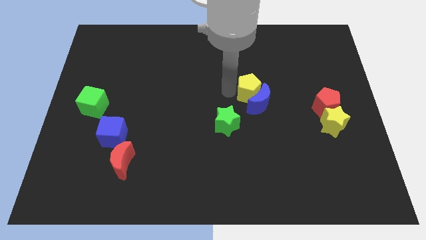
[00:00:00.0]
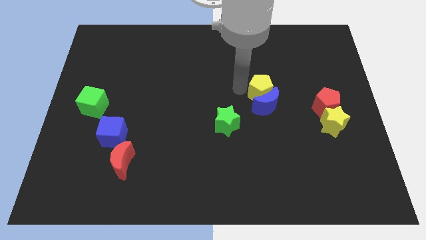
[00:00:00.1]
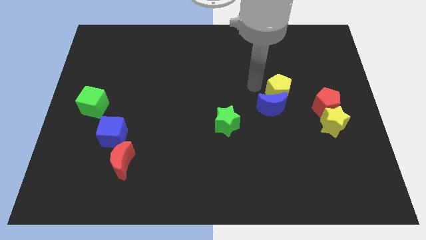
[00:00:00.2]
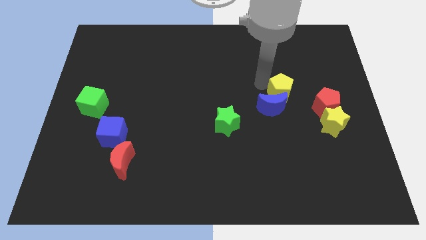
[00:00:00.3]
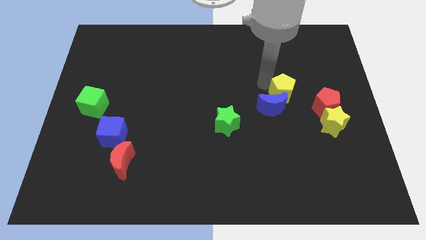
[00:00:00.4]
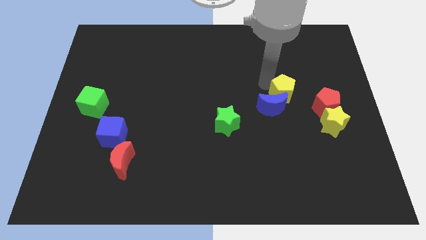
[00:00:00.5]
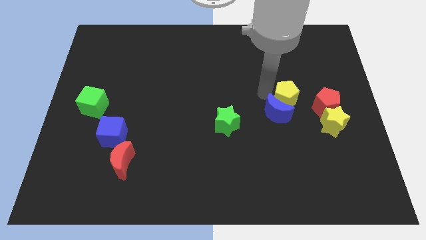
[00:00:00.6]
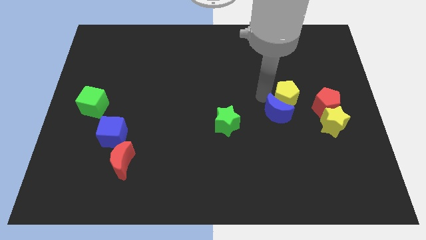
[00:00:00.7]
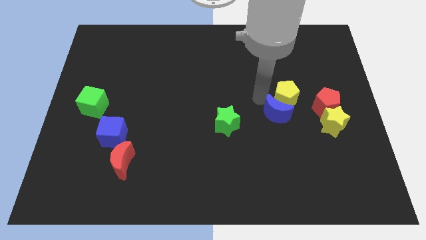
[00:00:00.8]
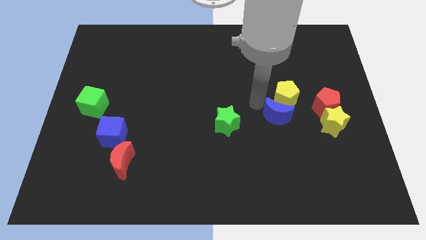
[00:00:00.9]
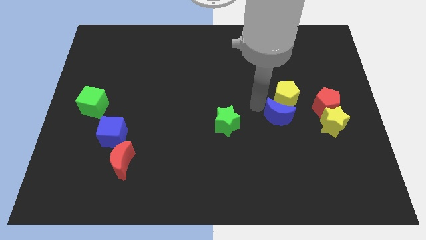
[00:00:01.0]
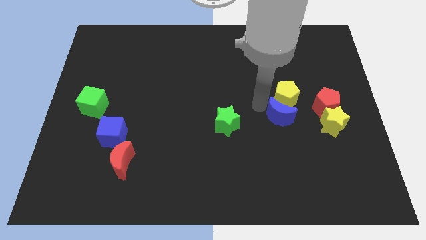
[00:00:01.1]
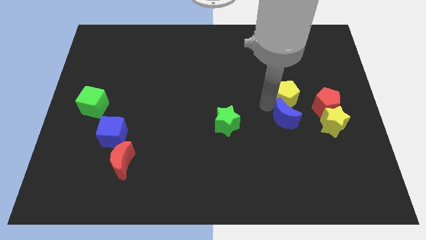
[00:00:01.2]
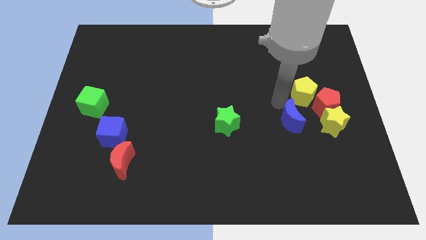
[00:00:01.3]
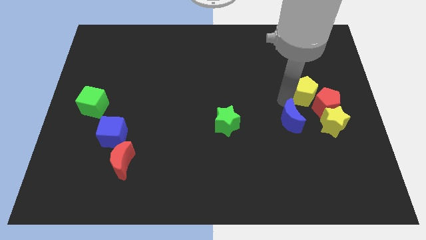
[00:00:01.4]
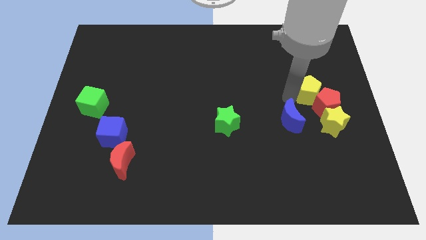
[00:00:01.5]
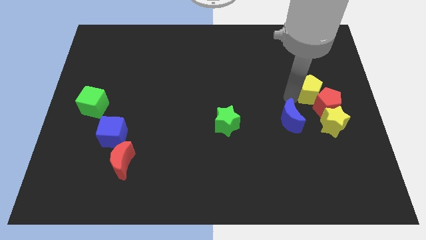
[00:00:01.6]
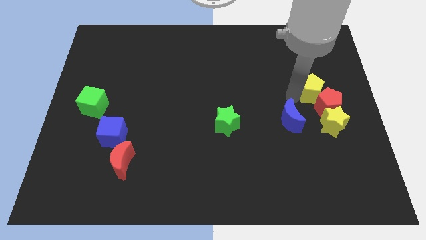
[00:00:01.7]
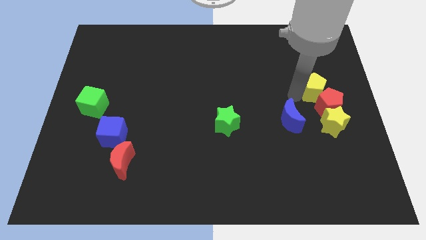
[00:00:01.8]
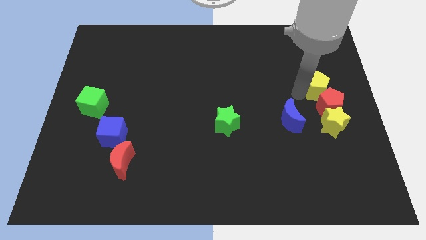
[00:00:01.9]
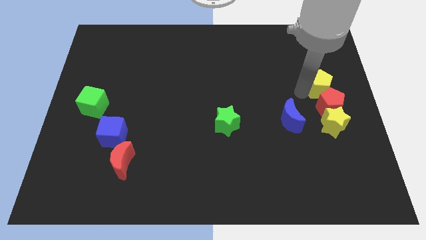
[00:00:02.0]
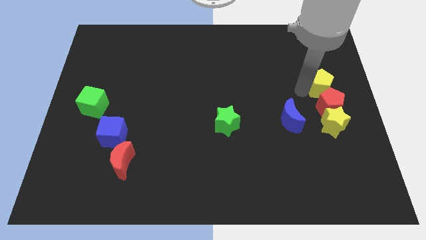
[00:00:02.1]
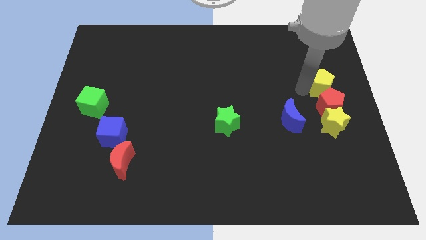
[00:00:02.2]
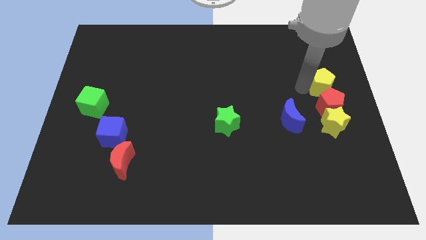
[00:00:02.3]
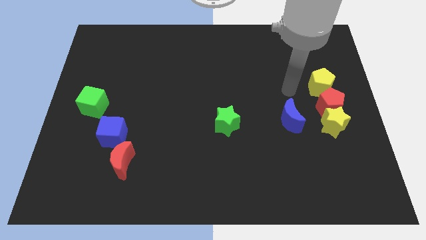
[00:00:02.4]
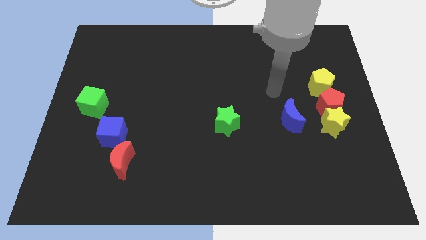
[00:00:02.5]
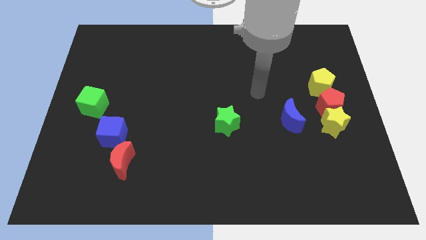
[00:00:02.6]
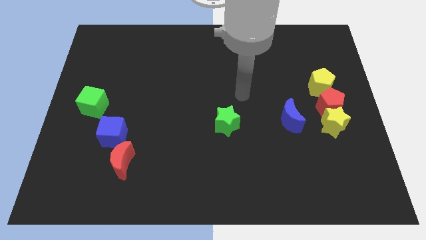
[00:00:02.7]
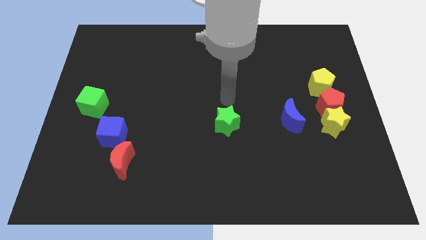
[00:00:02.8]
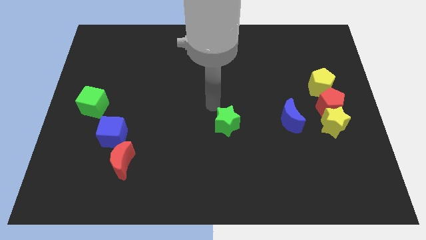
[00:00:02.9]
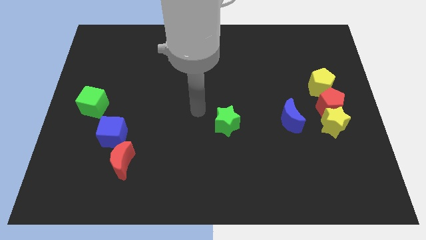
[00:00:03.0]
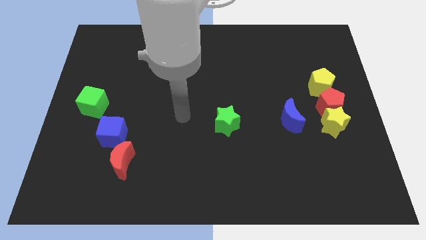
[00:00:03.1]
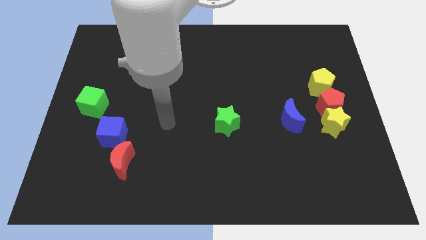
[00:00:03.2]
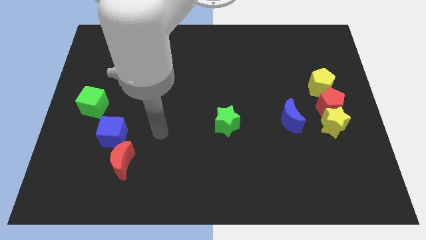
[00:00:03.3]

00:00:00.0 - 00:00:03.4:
slide the yellow pentagon to the top side of the red pentagon

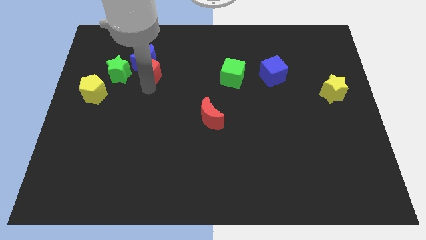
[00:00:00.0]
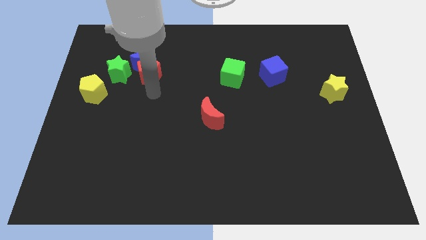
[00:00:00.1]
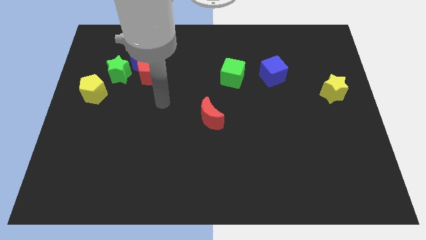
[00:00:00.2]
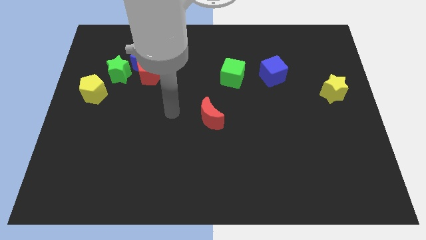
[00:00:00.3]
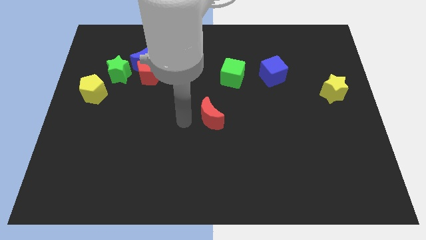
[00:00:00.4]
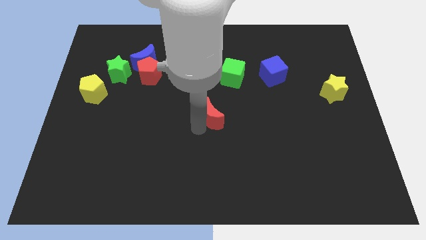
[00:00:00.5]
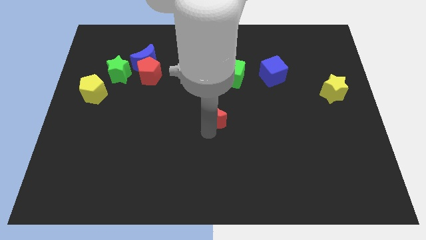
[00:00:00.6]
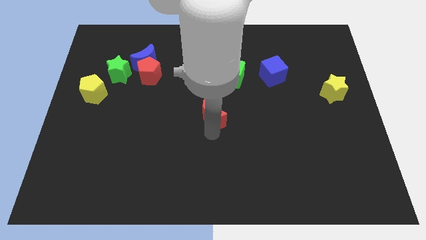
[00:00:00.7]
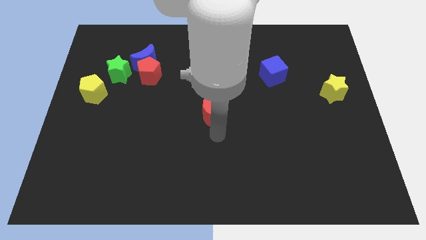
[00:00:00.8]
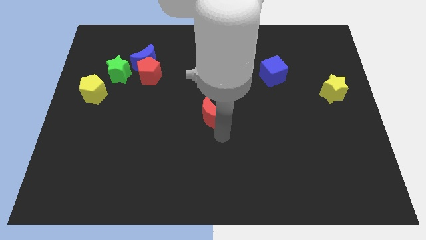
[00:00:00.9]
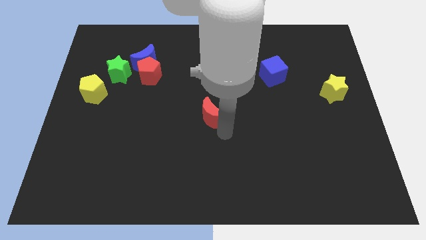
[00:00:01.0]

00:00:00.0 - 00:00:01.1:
move arm to the bottom side of red crescent

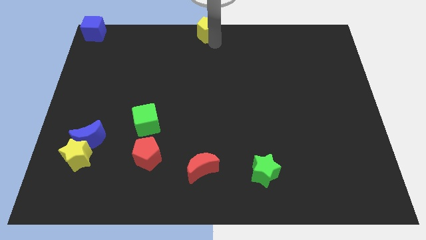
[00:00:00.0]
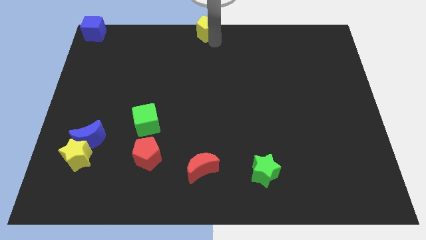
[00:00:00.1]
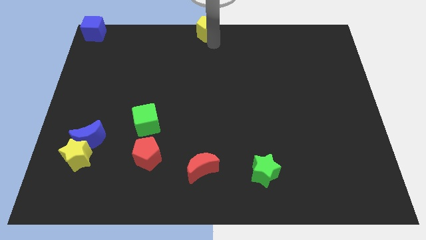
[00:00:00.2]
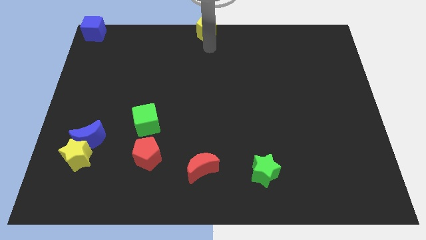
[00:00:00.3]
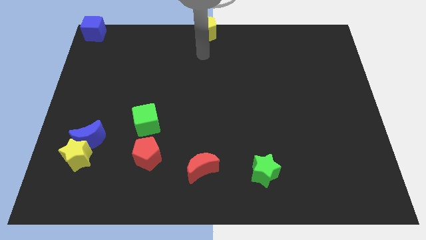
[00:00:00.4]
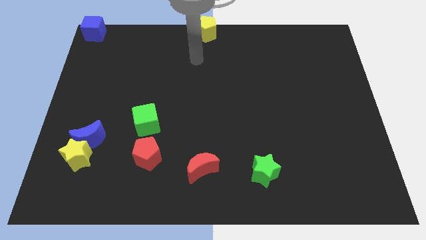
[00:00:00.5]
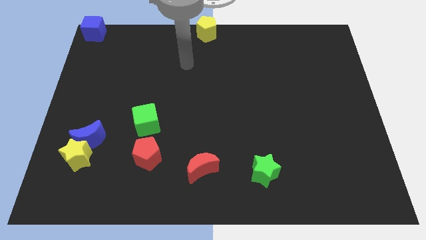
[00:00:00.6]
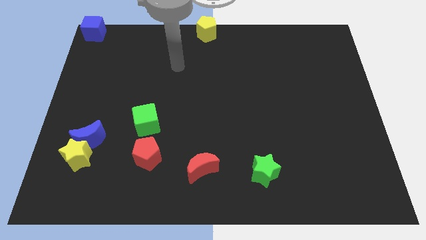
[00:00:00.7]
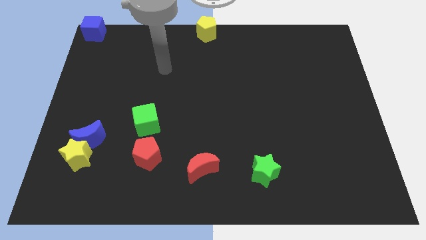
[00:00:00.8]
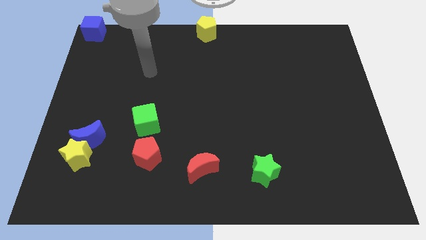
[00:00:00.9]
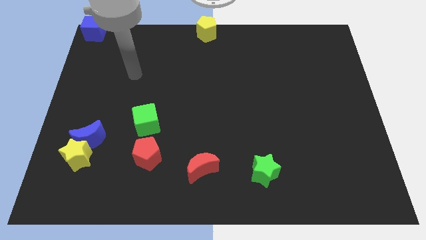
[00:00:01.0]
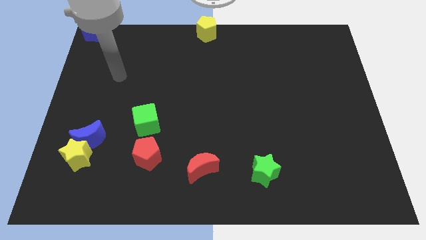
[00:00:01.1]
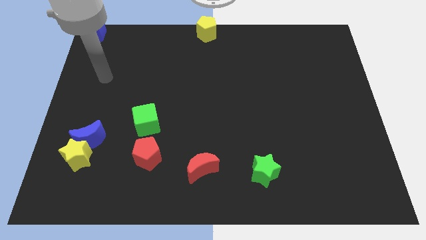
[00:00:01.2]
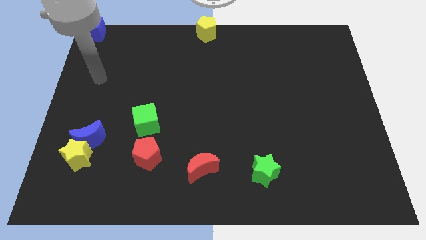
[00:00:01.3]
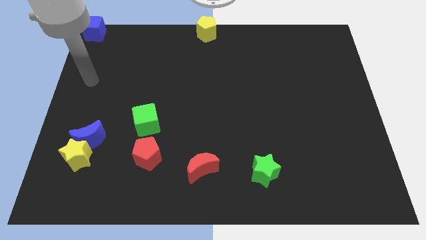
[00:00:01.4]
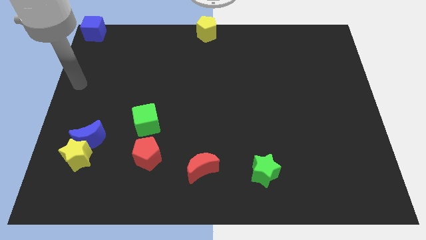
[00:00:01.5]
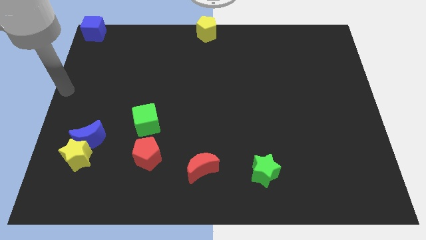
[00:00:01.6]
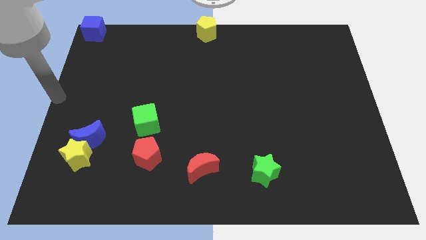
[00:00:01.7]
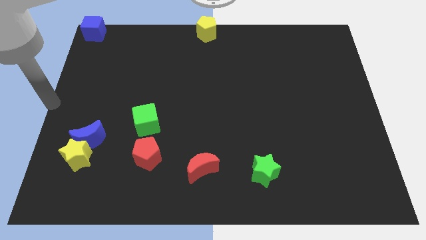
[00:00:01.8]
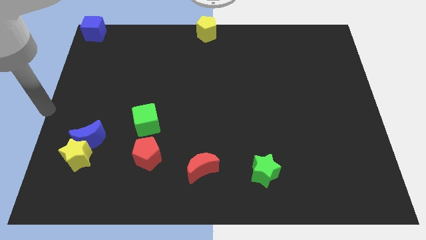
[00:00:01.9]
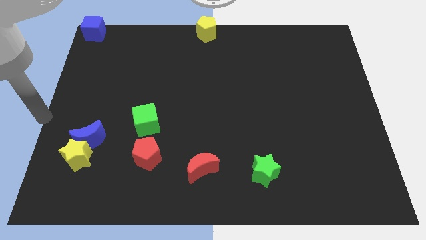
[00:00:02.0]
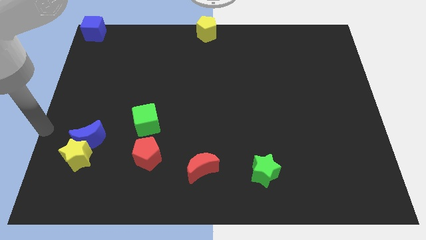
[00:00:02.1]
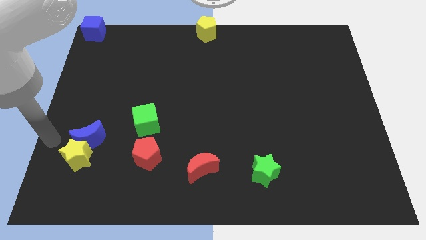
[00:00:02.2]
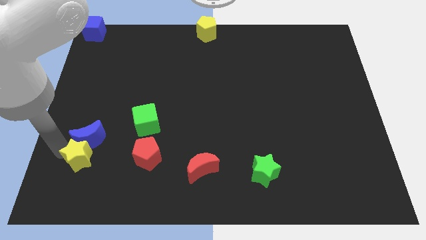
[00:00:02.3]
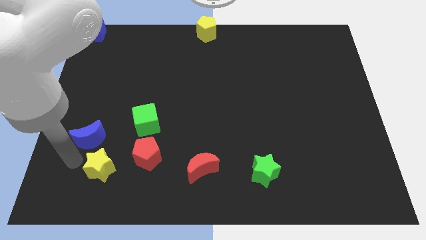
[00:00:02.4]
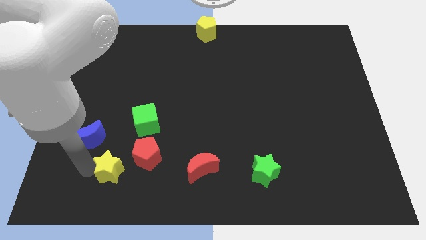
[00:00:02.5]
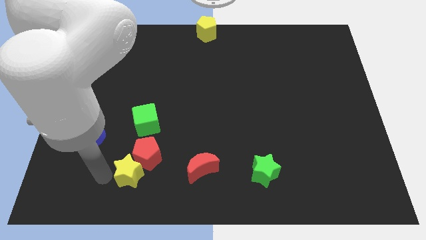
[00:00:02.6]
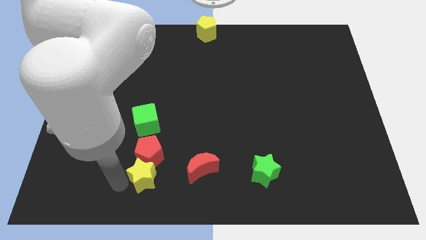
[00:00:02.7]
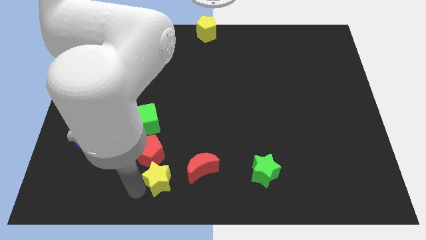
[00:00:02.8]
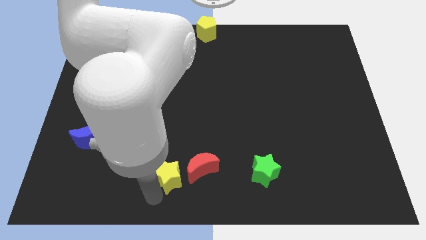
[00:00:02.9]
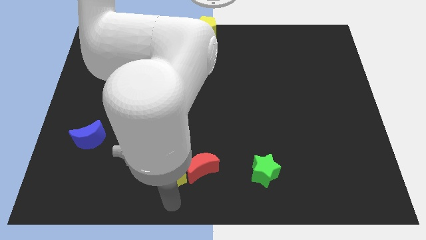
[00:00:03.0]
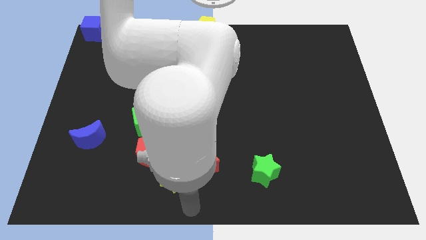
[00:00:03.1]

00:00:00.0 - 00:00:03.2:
yellow the star towards the left side of the red crescent

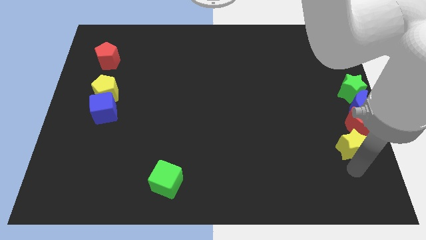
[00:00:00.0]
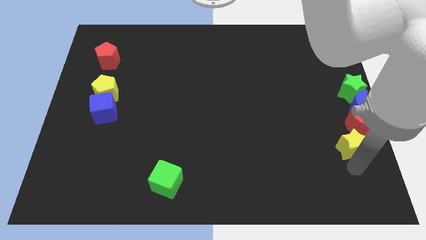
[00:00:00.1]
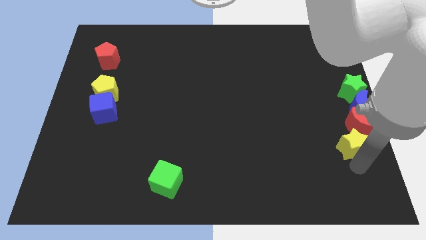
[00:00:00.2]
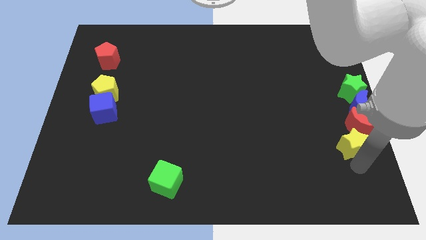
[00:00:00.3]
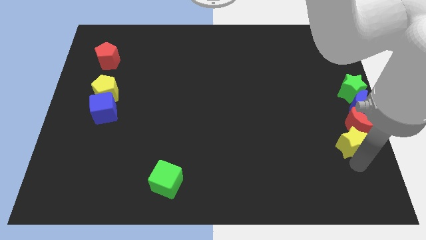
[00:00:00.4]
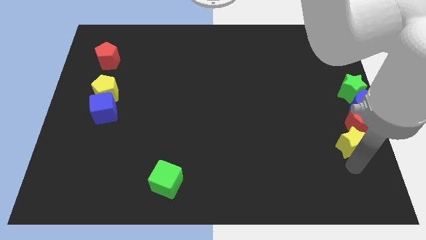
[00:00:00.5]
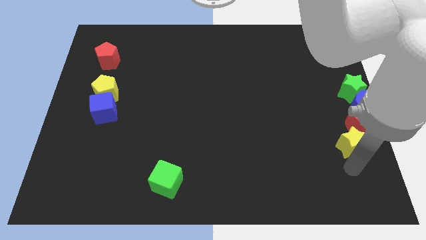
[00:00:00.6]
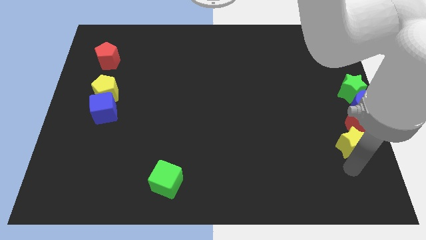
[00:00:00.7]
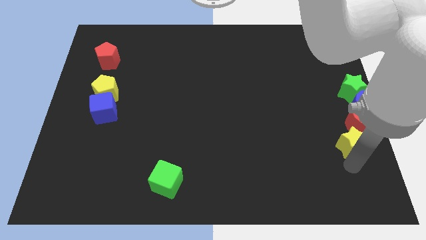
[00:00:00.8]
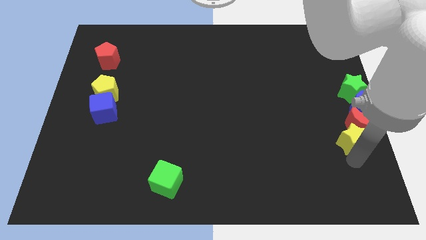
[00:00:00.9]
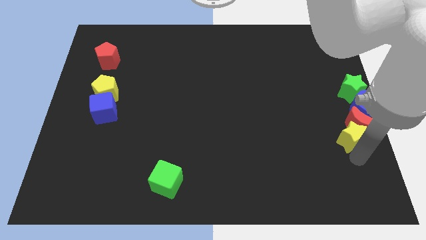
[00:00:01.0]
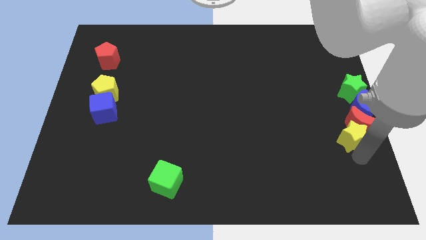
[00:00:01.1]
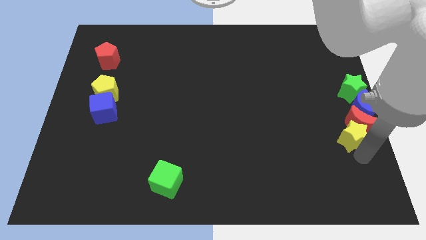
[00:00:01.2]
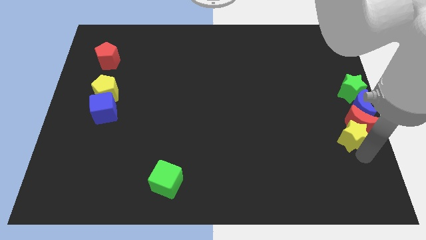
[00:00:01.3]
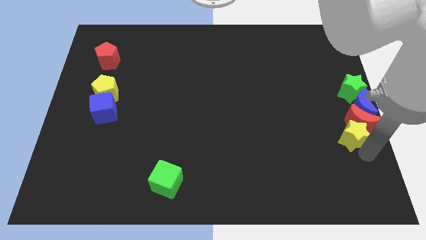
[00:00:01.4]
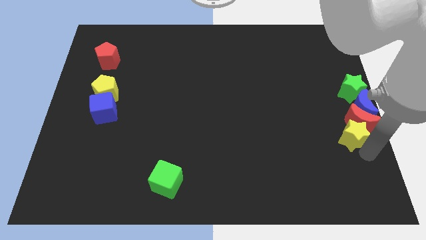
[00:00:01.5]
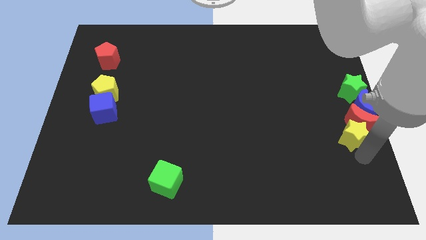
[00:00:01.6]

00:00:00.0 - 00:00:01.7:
push the yellow star into the red moon
